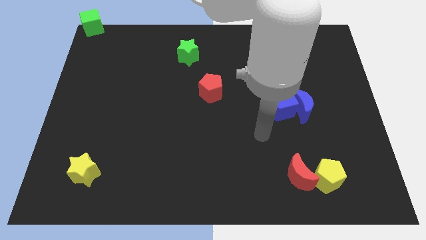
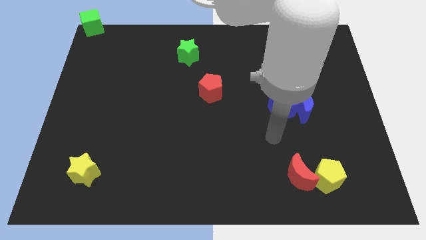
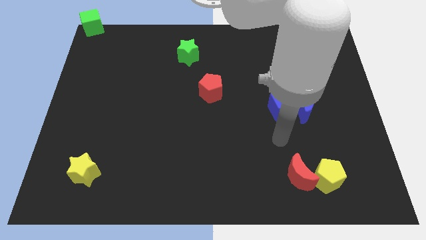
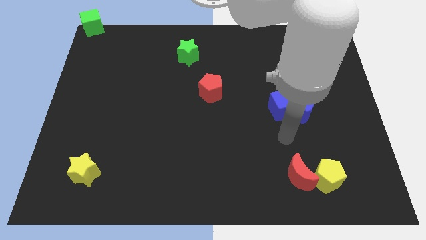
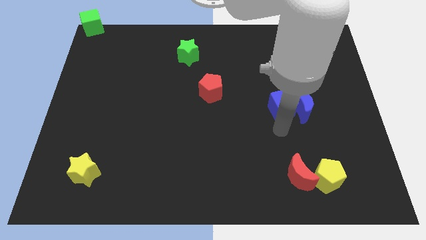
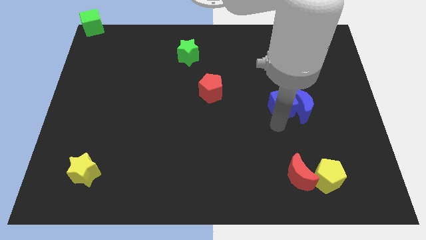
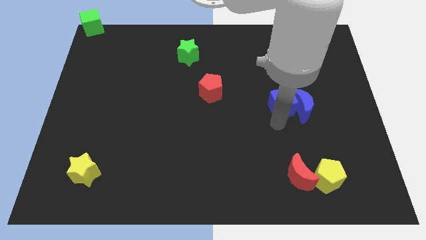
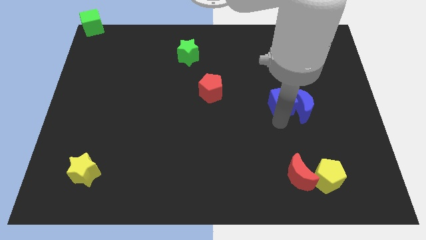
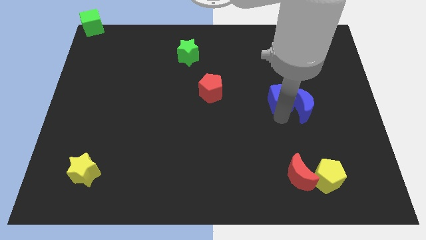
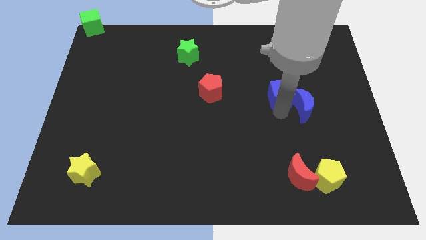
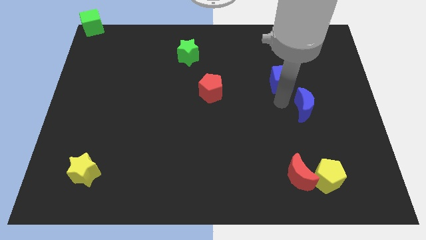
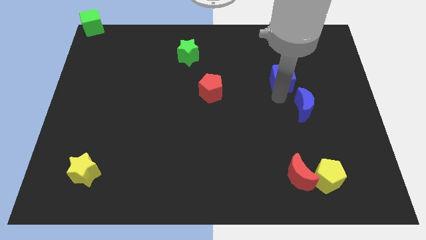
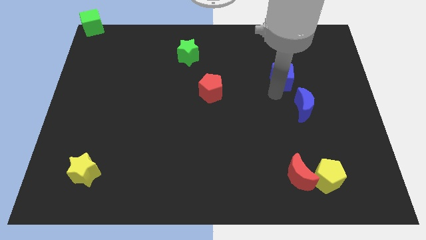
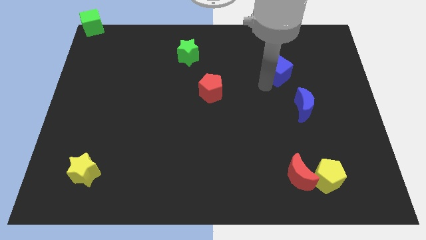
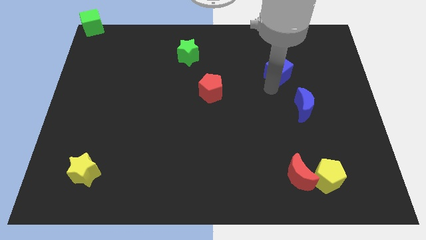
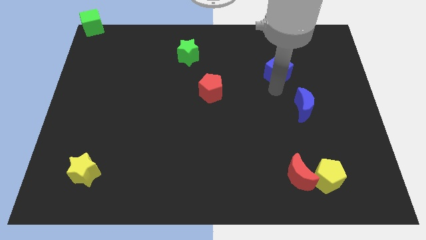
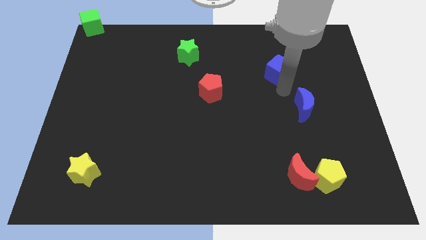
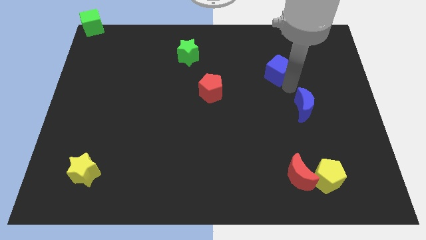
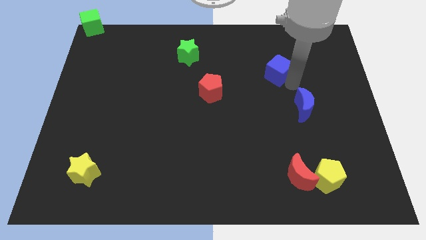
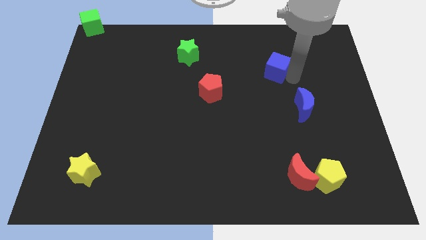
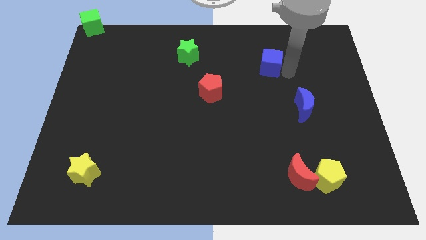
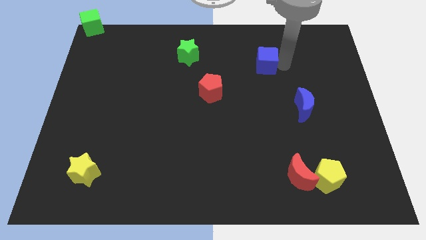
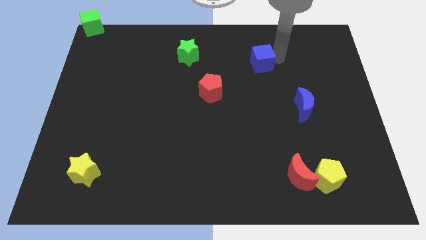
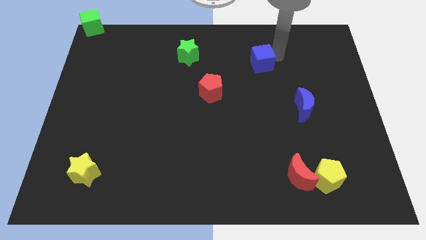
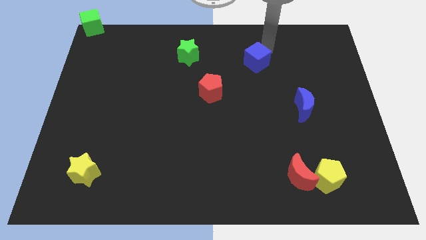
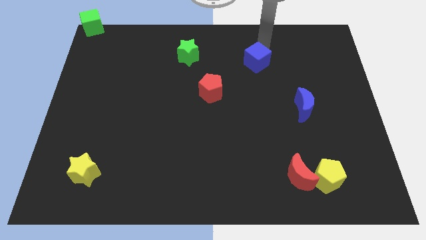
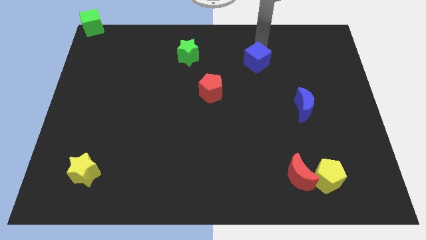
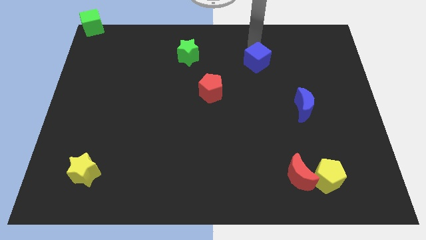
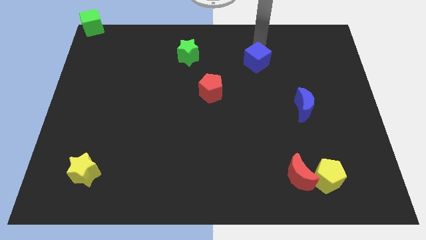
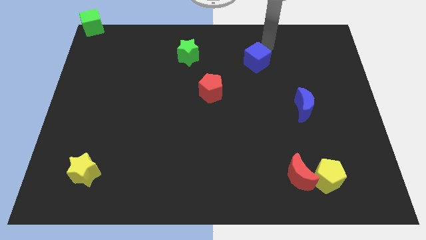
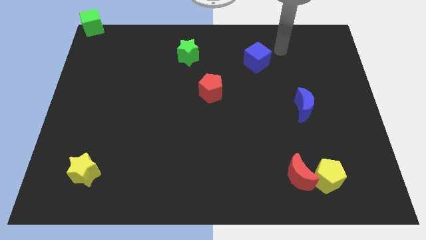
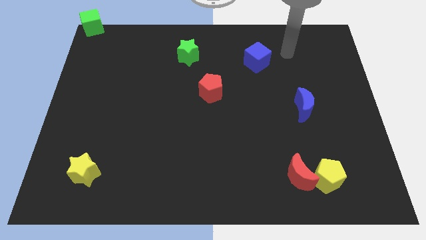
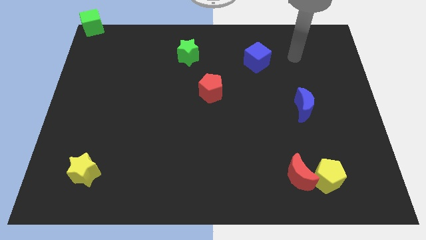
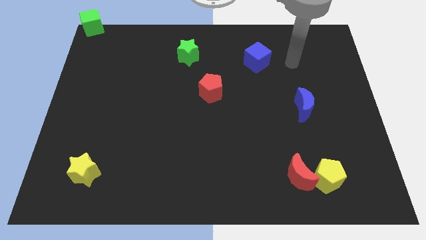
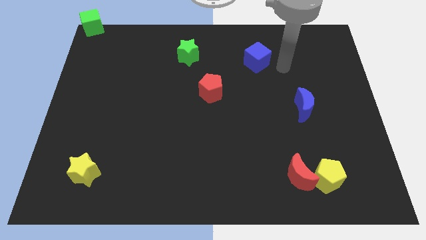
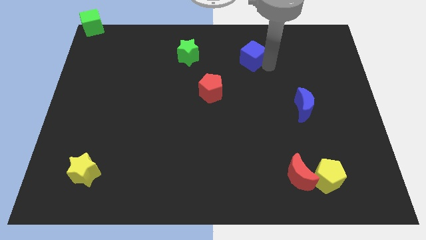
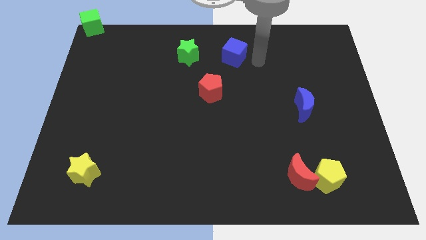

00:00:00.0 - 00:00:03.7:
separate blue cube from blue moon

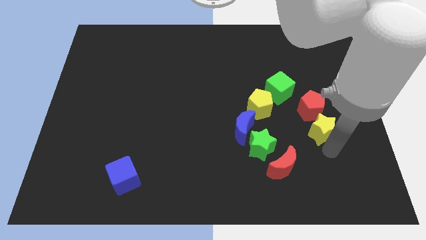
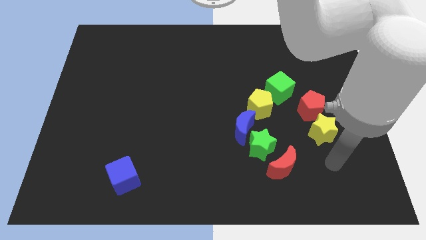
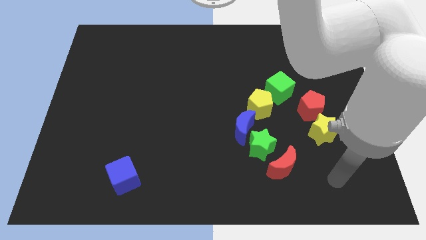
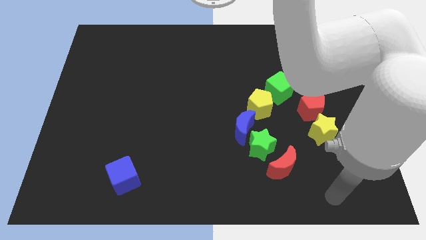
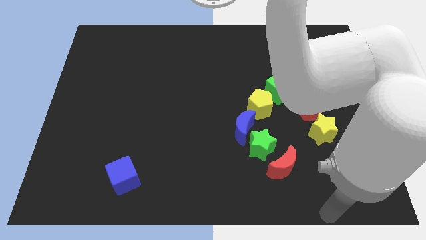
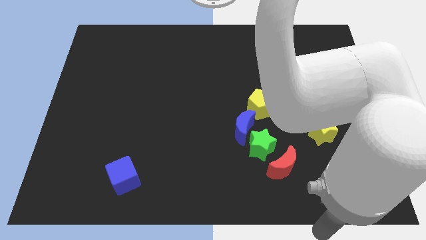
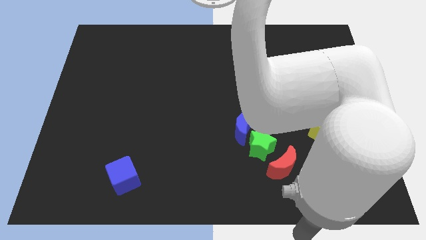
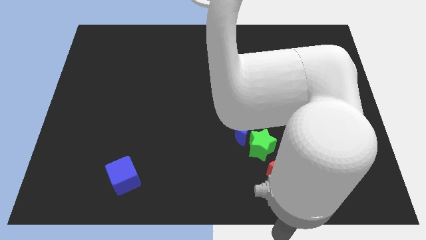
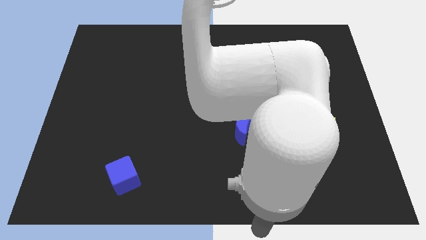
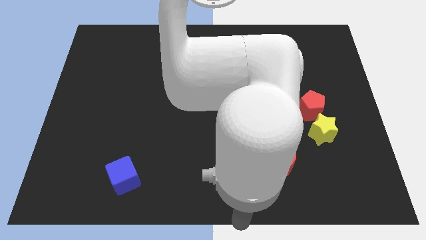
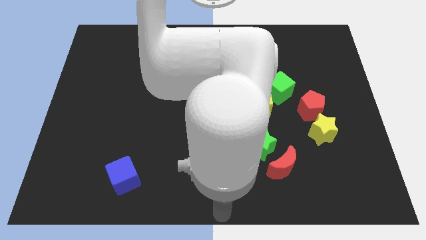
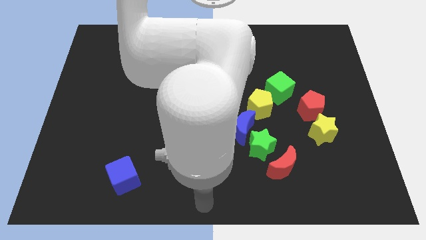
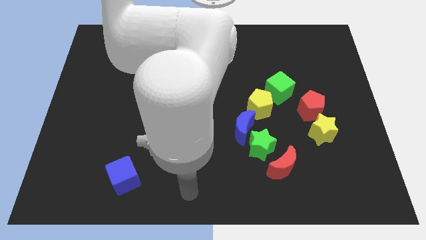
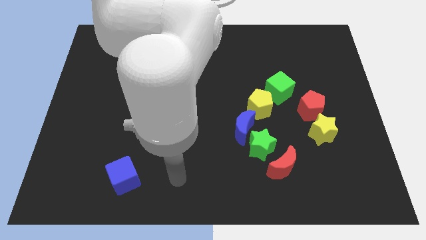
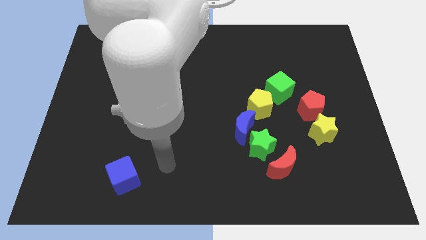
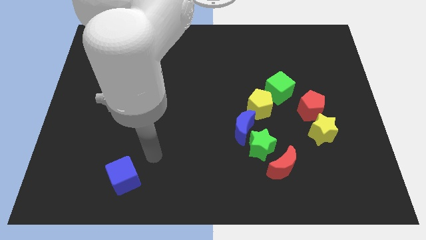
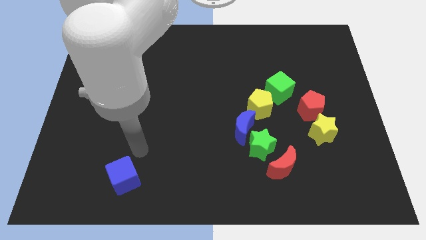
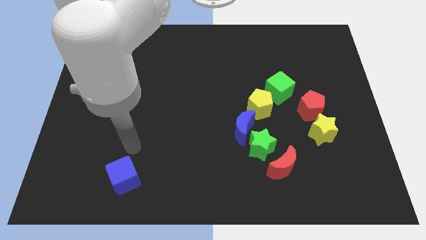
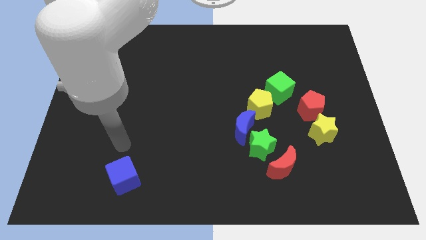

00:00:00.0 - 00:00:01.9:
point your arm above blue cube

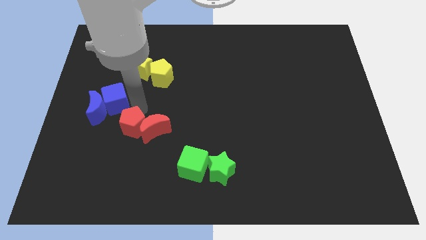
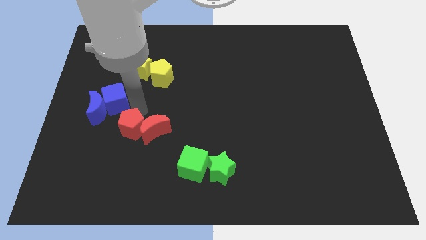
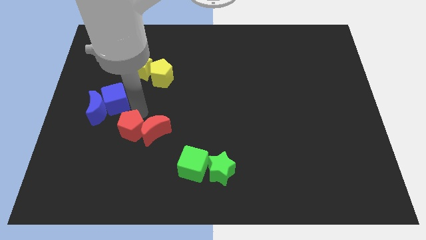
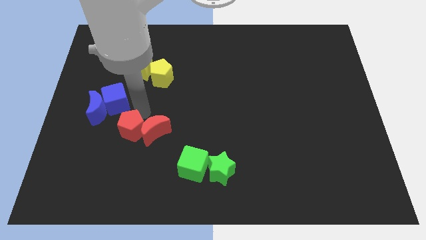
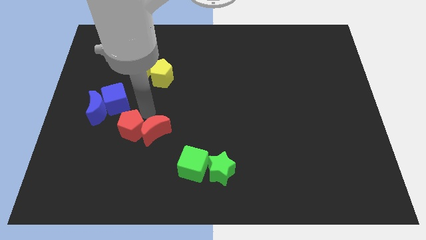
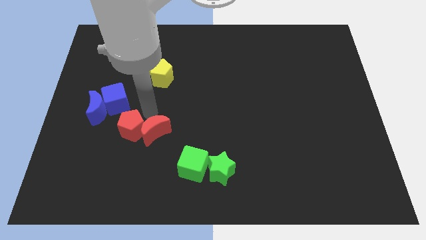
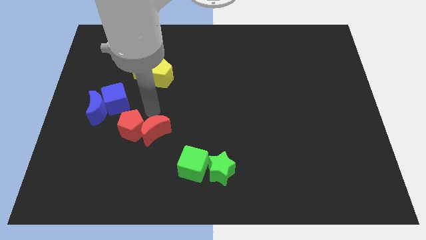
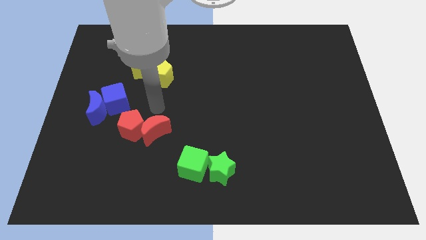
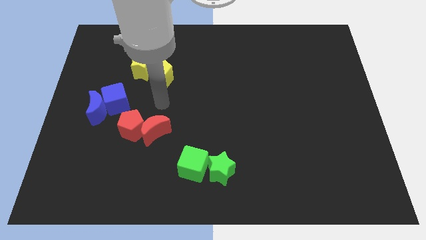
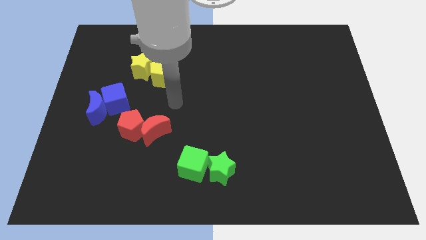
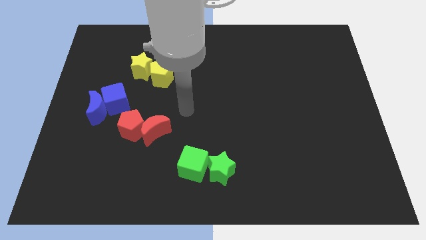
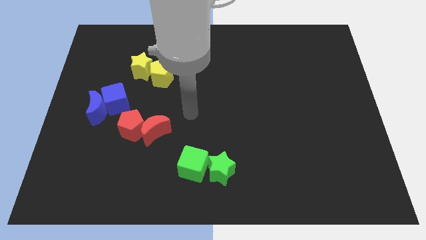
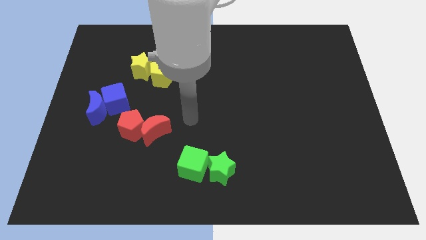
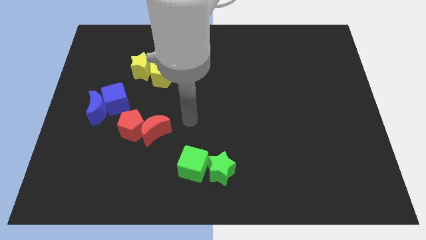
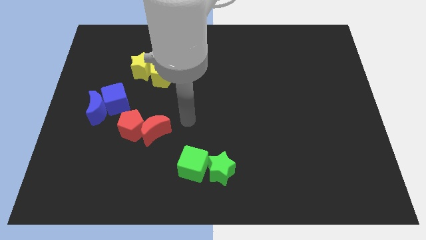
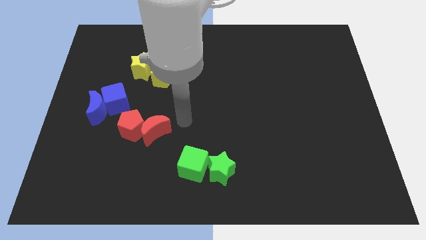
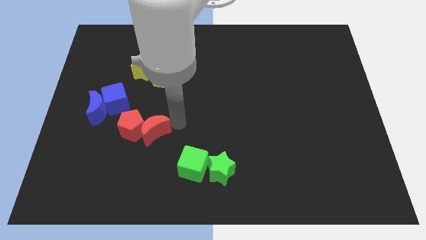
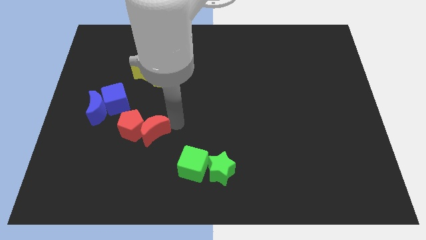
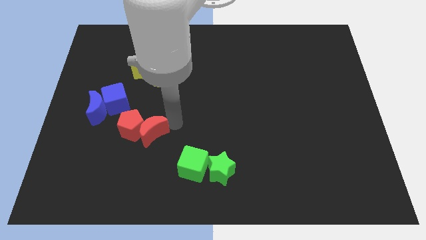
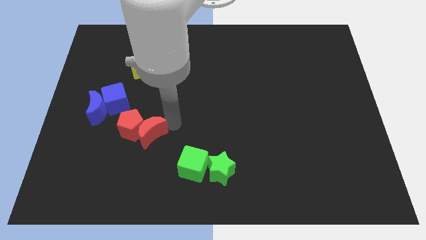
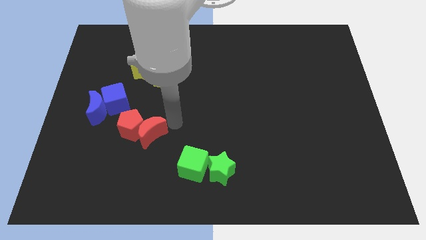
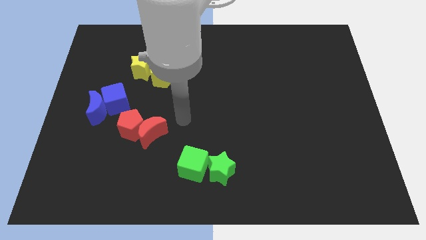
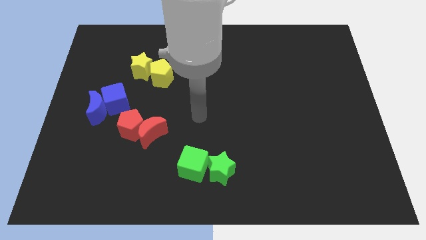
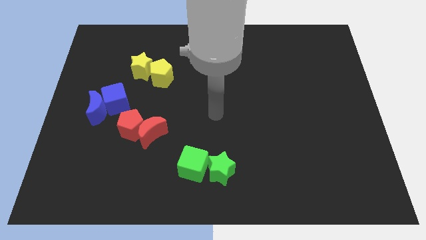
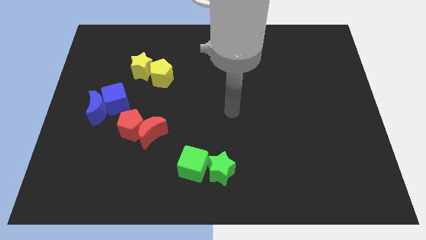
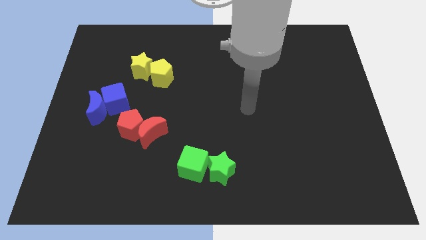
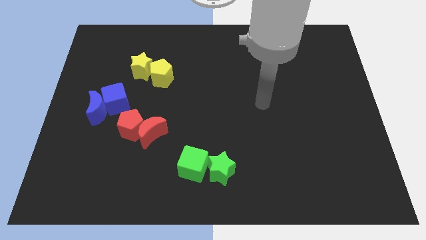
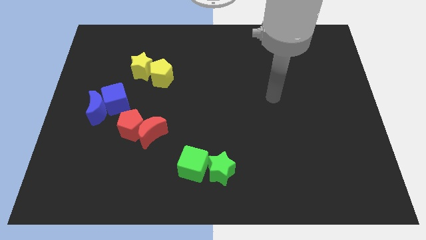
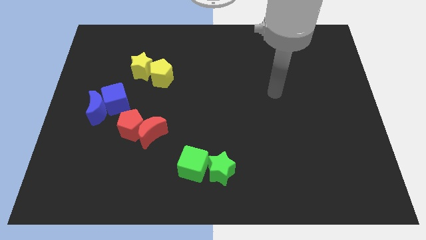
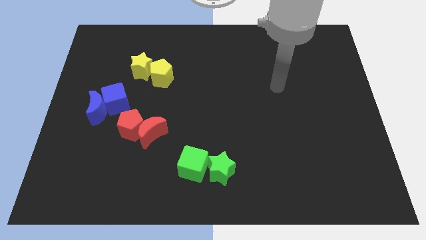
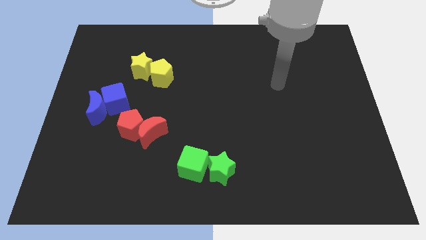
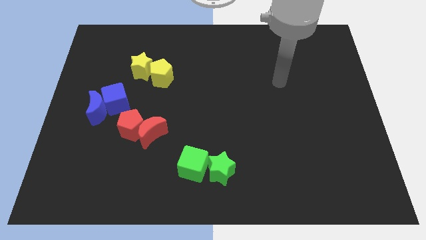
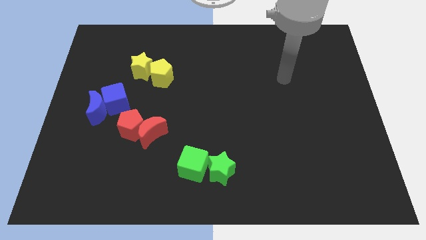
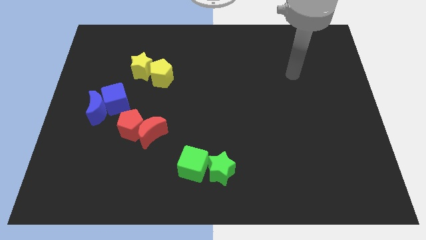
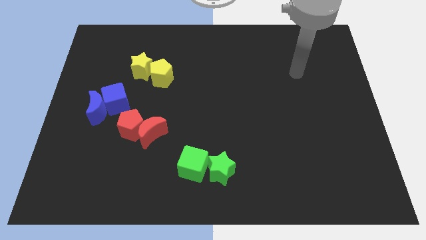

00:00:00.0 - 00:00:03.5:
place your arm to center right of the board
